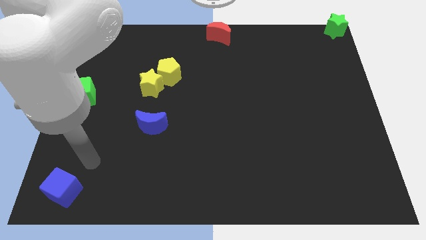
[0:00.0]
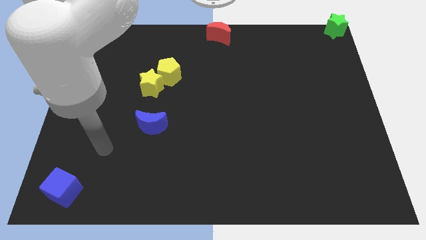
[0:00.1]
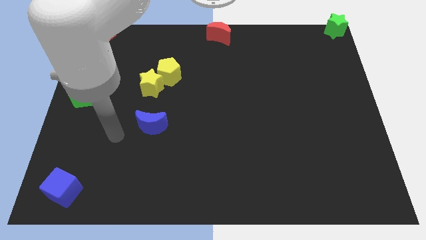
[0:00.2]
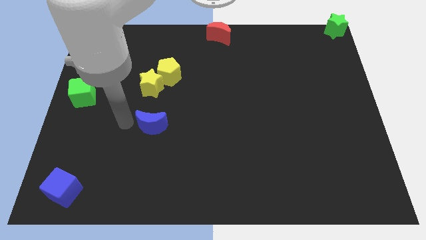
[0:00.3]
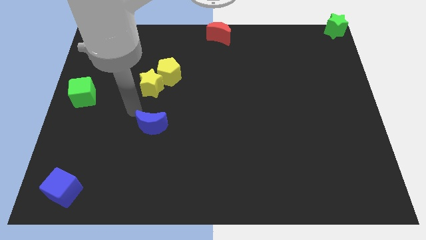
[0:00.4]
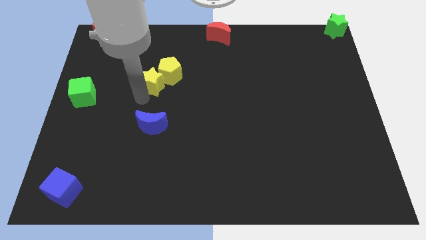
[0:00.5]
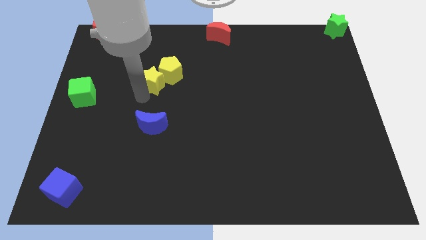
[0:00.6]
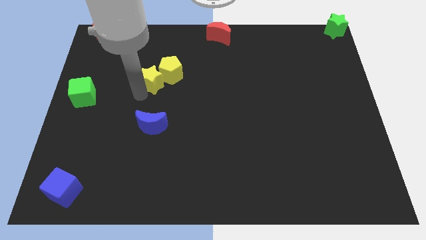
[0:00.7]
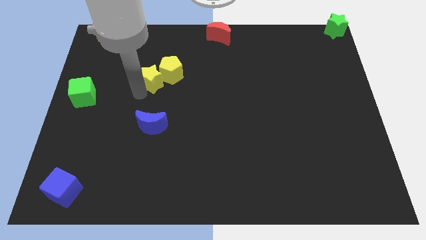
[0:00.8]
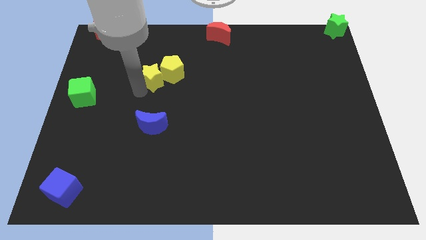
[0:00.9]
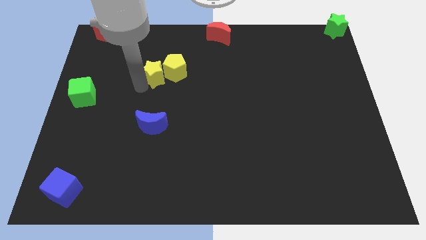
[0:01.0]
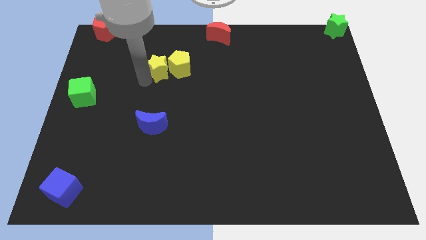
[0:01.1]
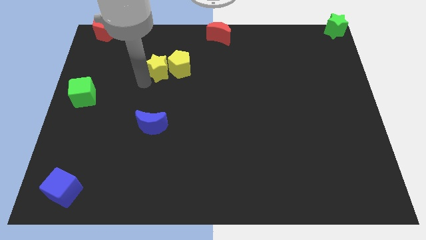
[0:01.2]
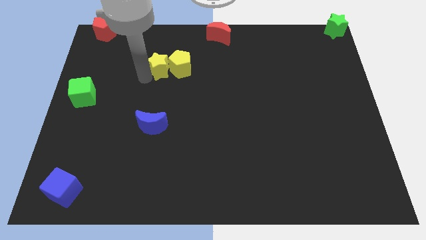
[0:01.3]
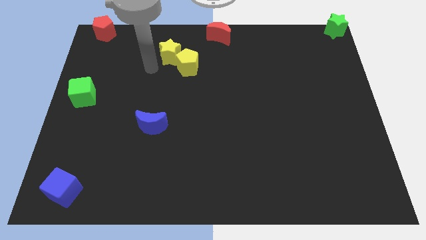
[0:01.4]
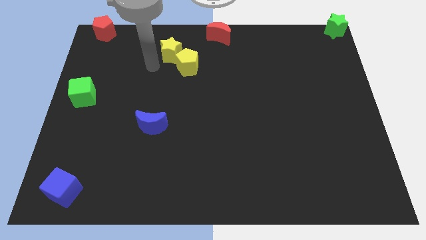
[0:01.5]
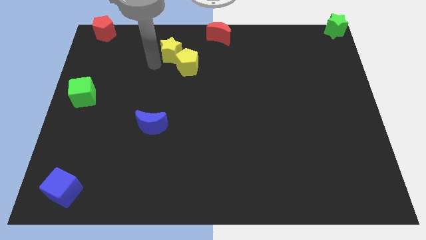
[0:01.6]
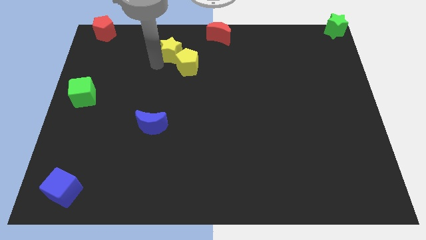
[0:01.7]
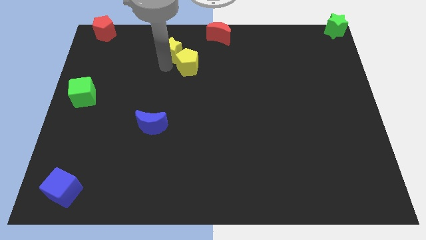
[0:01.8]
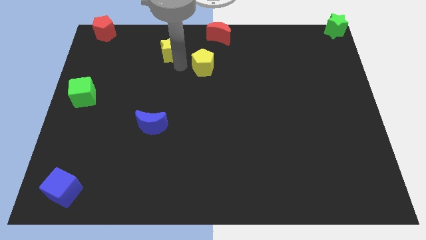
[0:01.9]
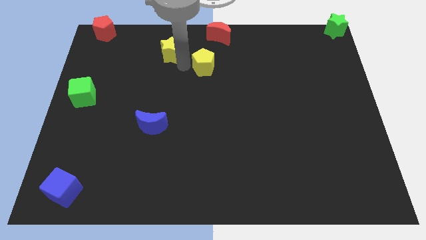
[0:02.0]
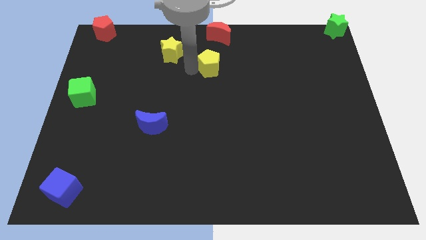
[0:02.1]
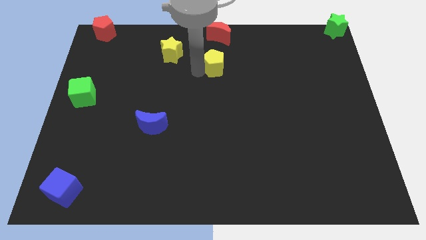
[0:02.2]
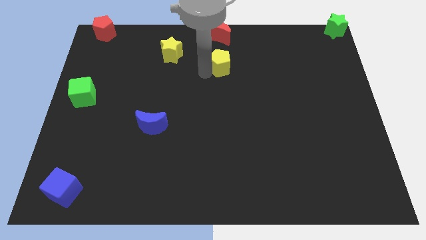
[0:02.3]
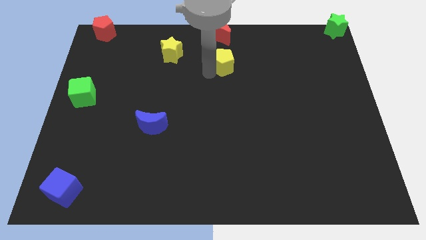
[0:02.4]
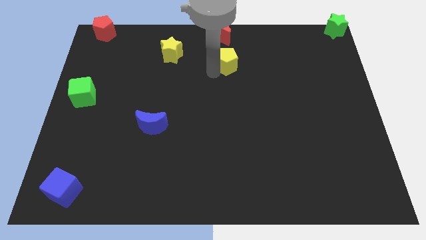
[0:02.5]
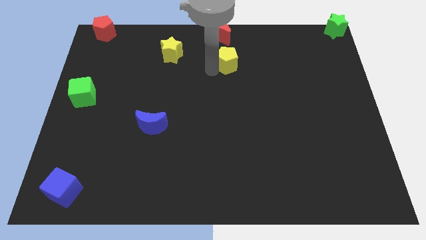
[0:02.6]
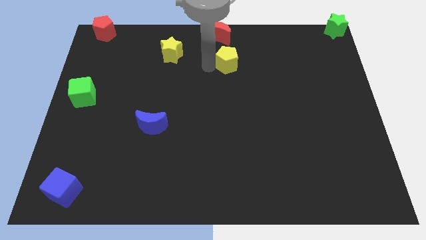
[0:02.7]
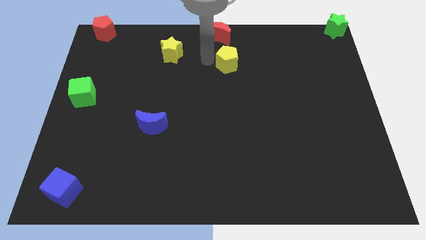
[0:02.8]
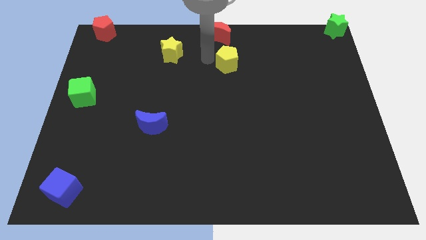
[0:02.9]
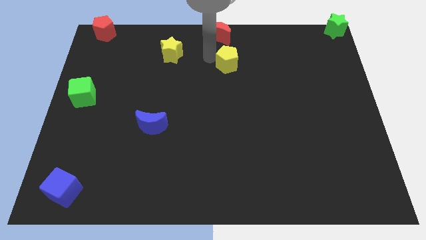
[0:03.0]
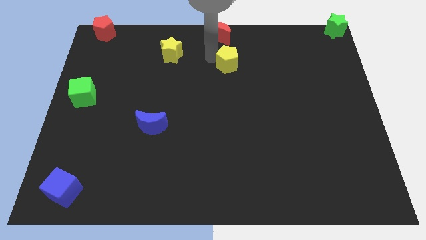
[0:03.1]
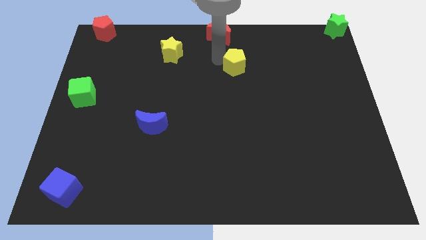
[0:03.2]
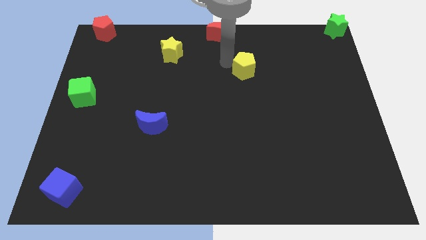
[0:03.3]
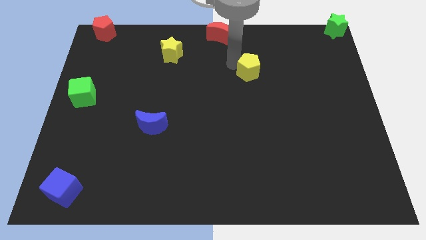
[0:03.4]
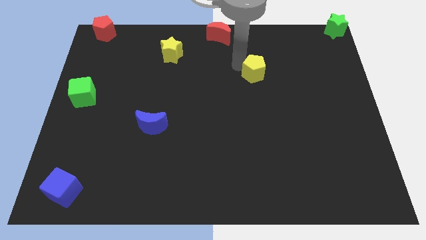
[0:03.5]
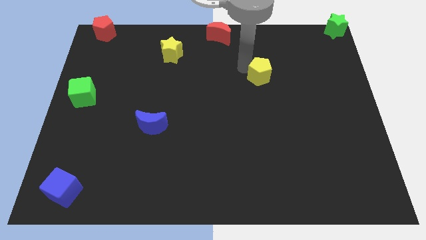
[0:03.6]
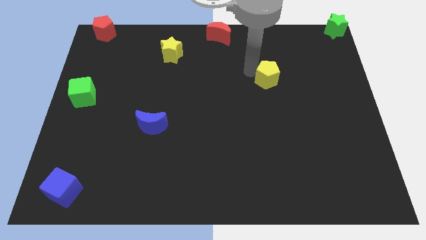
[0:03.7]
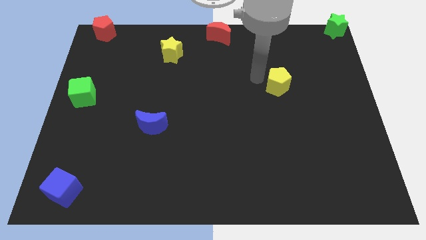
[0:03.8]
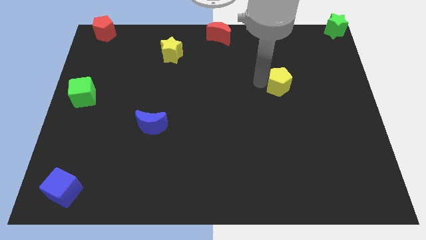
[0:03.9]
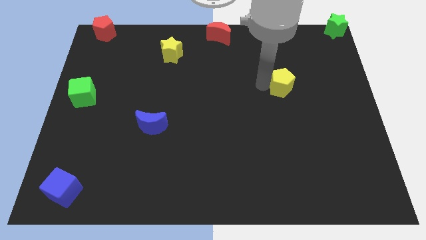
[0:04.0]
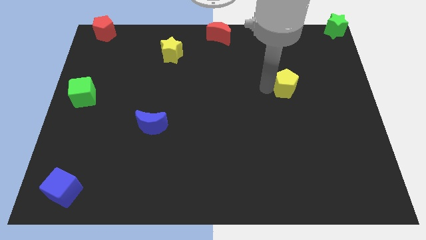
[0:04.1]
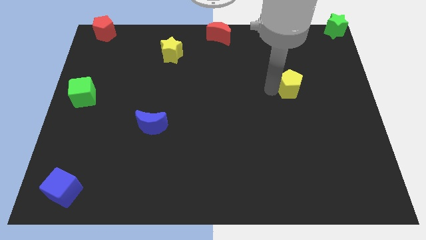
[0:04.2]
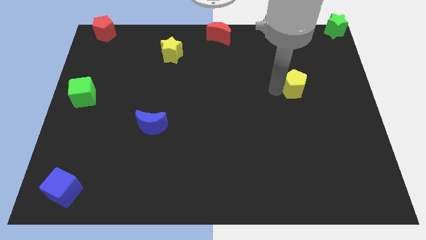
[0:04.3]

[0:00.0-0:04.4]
move yellow star away from the yellow pentagon

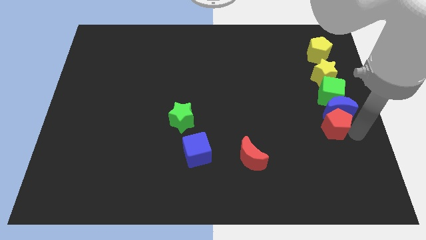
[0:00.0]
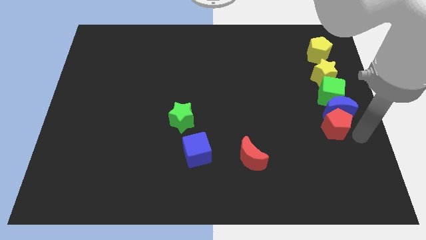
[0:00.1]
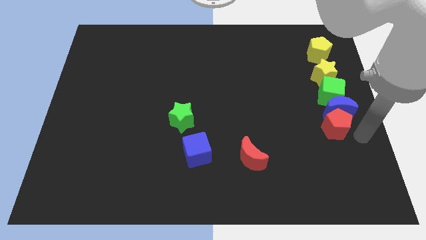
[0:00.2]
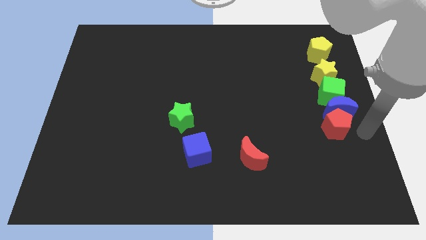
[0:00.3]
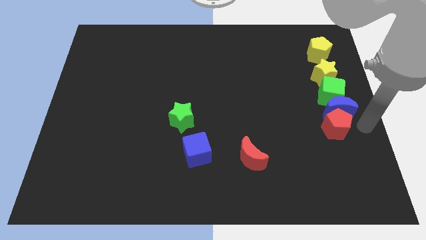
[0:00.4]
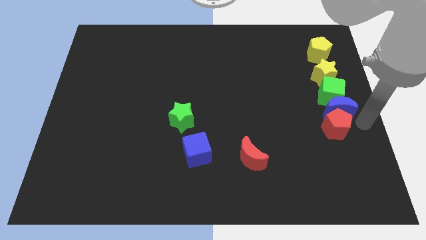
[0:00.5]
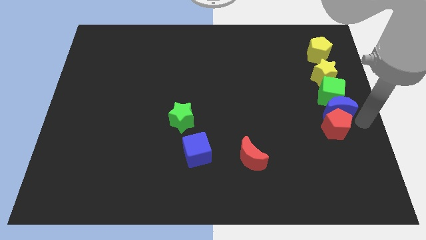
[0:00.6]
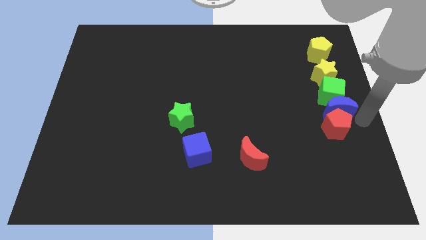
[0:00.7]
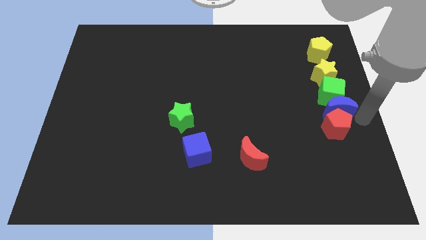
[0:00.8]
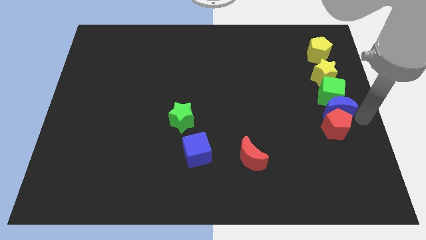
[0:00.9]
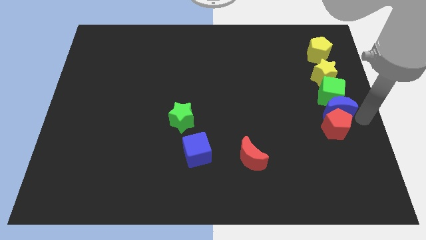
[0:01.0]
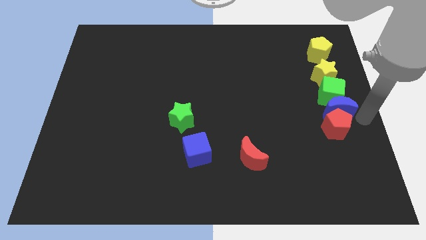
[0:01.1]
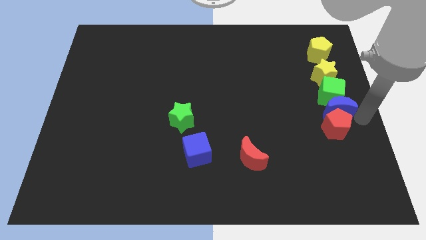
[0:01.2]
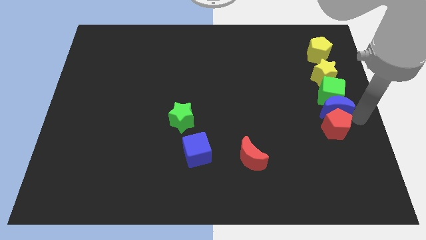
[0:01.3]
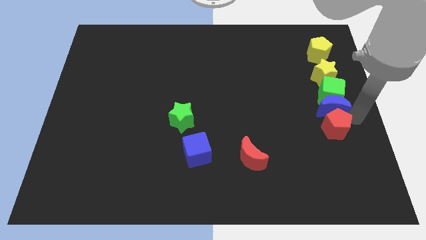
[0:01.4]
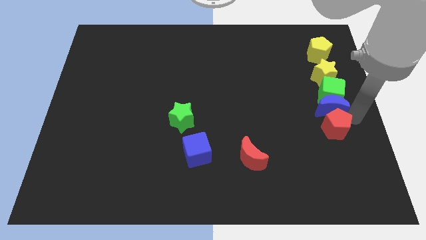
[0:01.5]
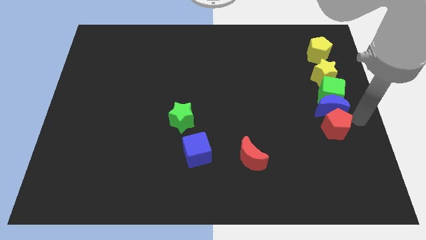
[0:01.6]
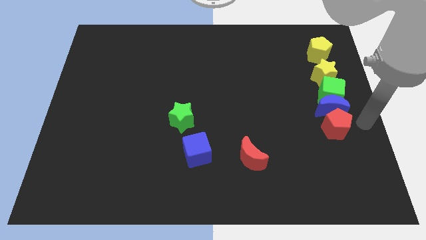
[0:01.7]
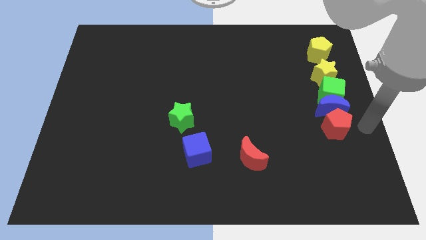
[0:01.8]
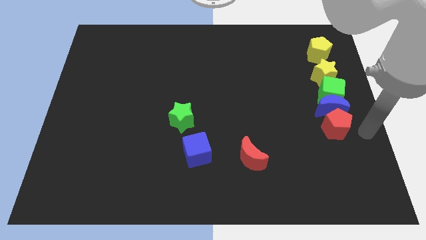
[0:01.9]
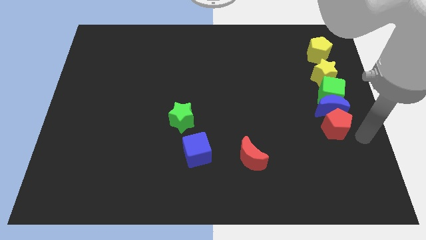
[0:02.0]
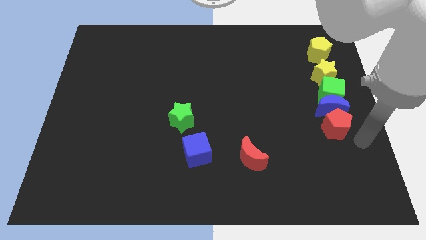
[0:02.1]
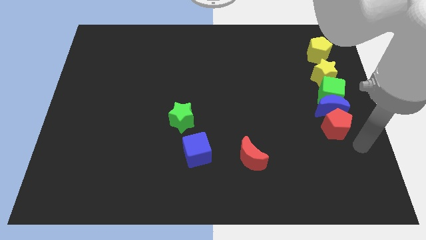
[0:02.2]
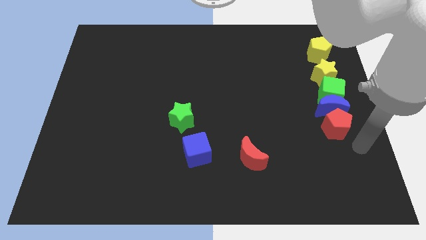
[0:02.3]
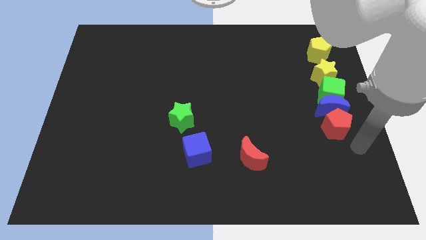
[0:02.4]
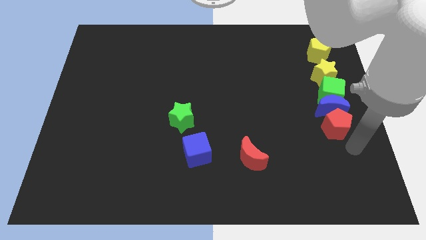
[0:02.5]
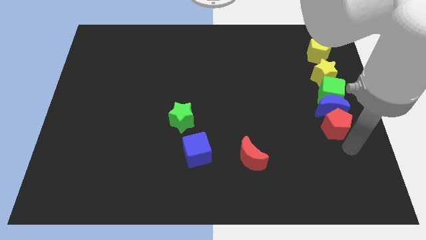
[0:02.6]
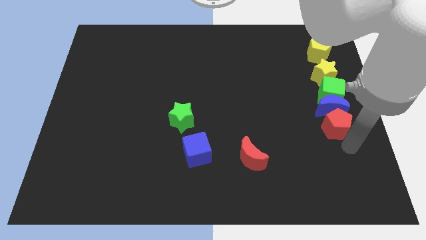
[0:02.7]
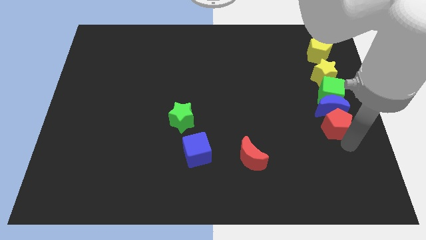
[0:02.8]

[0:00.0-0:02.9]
slightly move the red pentagon and blue crescent towards right

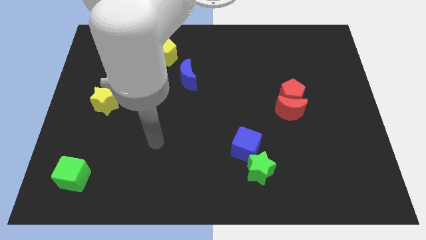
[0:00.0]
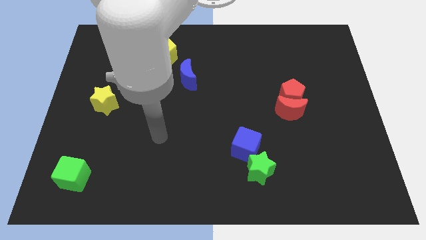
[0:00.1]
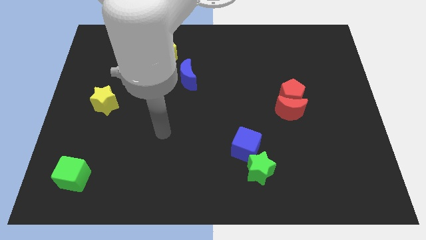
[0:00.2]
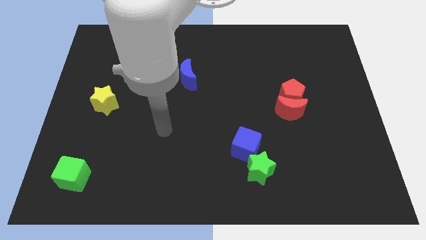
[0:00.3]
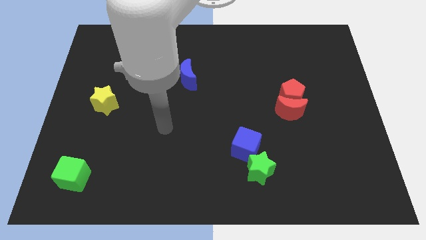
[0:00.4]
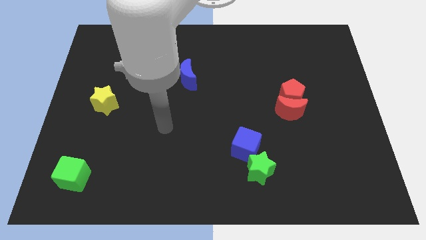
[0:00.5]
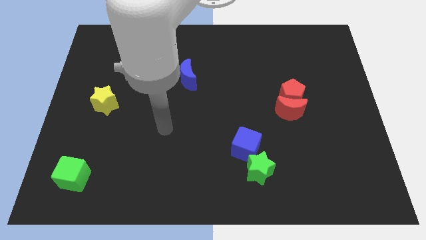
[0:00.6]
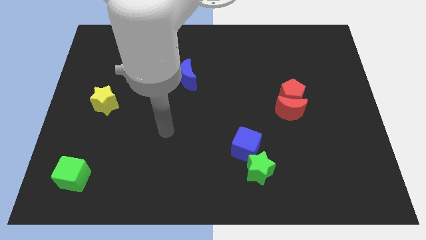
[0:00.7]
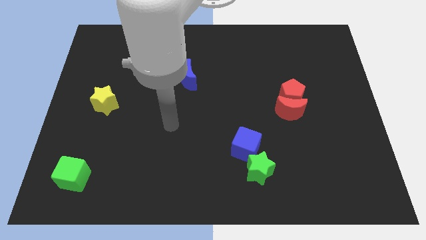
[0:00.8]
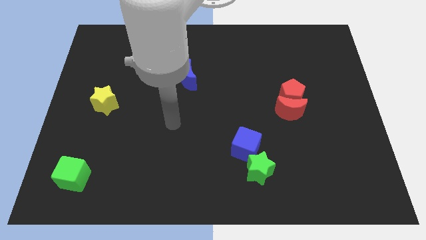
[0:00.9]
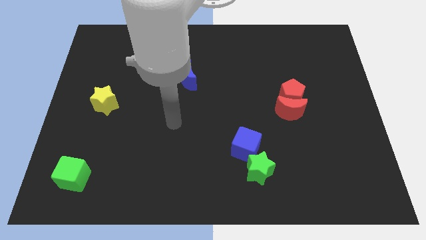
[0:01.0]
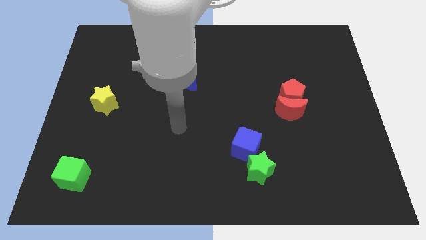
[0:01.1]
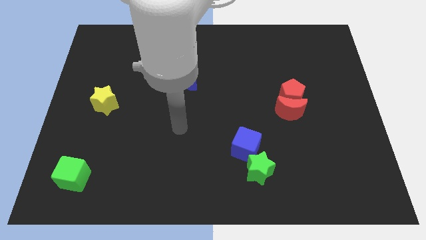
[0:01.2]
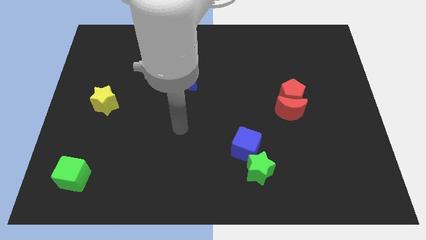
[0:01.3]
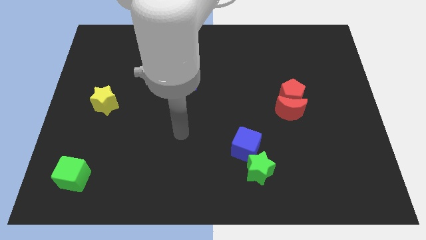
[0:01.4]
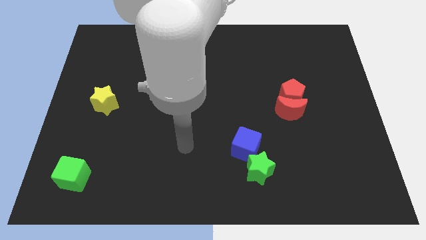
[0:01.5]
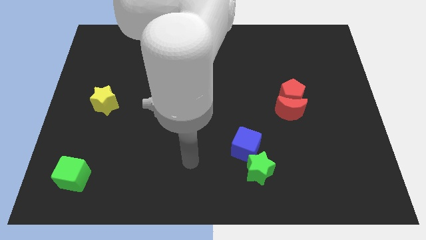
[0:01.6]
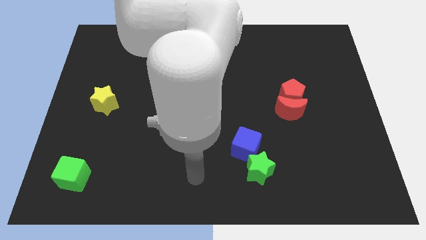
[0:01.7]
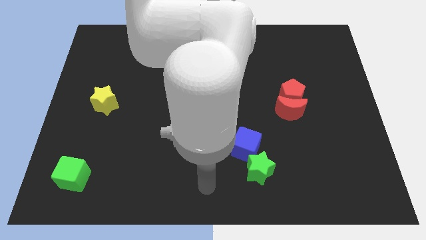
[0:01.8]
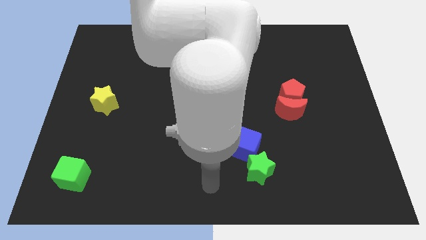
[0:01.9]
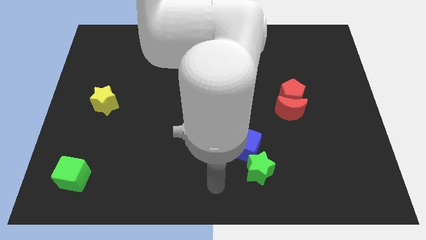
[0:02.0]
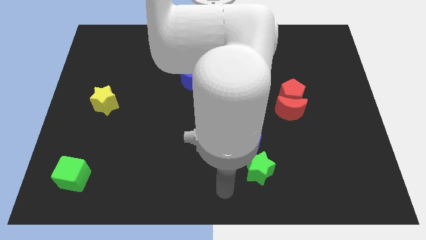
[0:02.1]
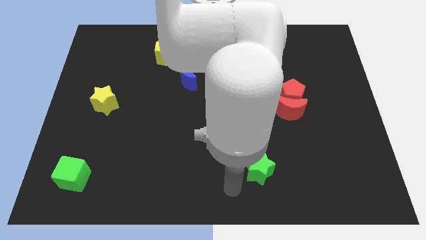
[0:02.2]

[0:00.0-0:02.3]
move your arm to the bottom center of the board
